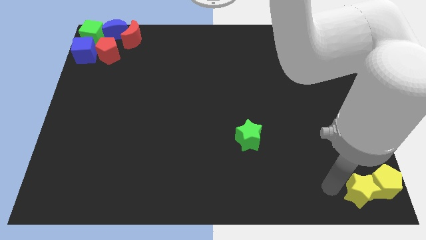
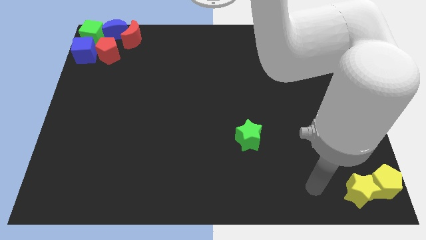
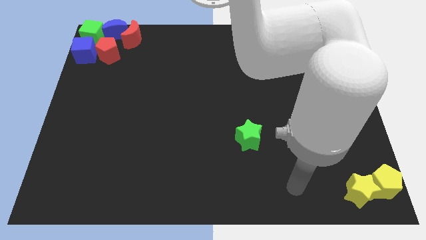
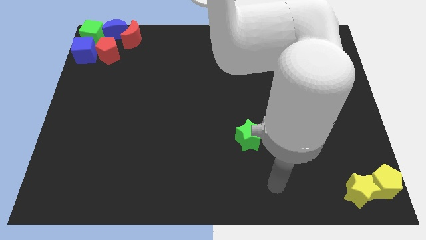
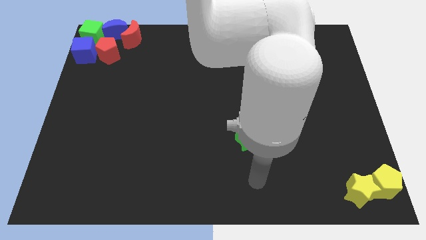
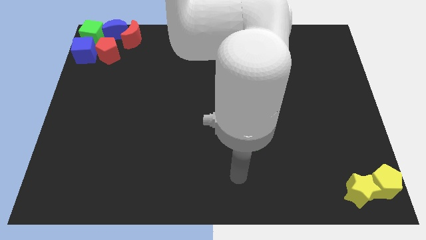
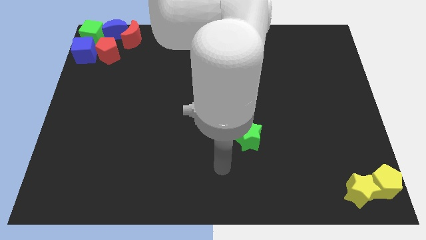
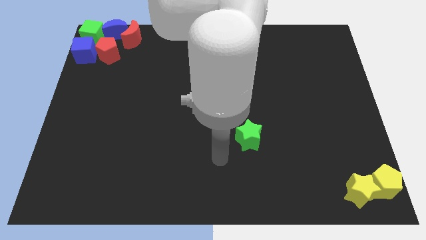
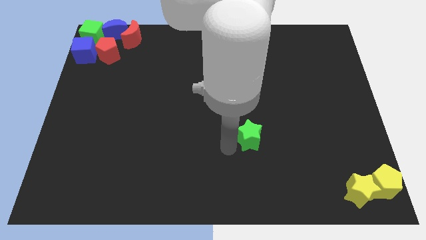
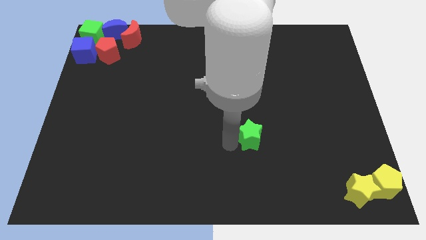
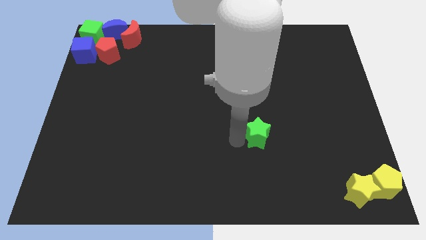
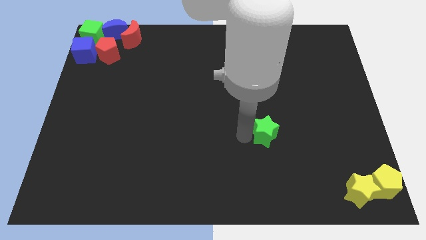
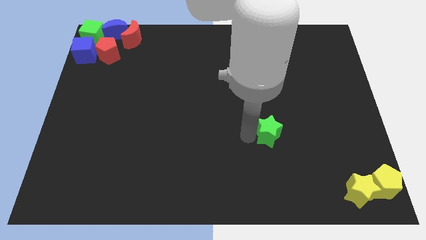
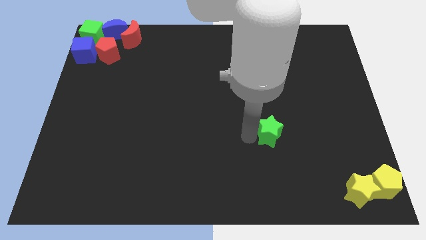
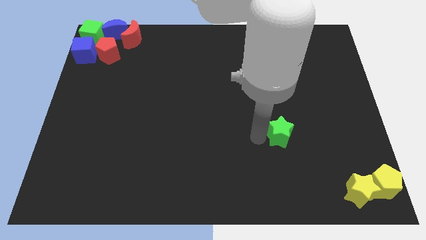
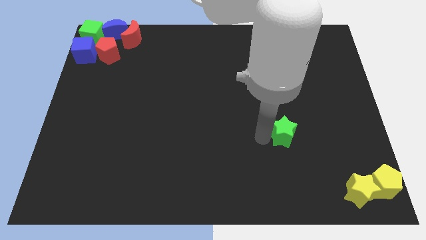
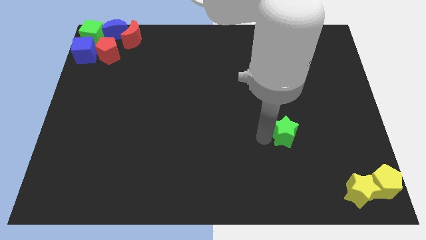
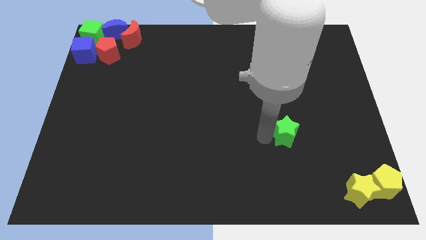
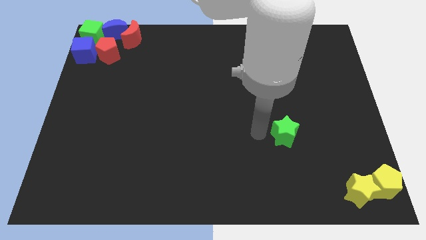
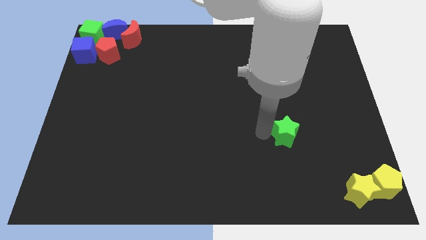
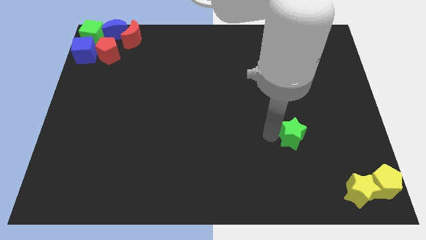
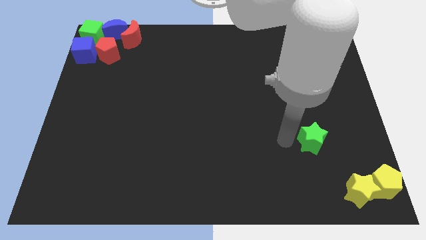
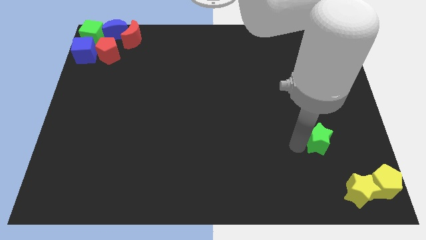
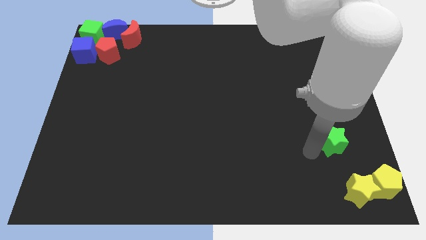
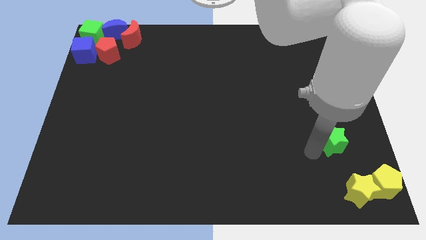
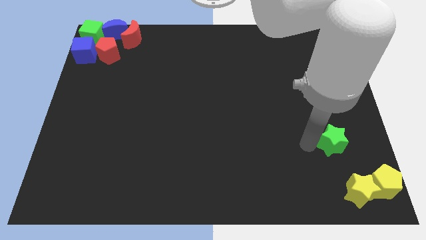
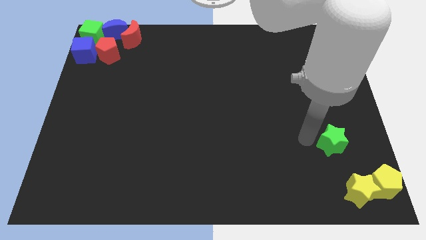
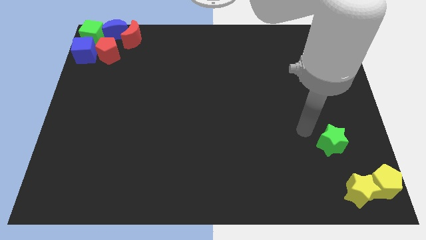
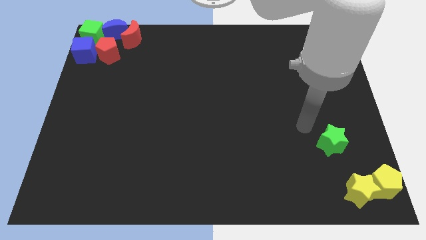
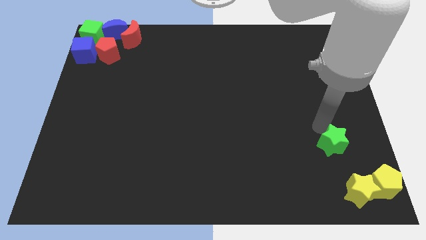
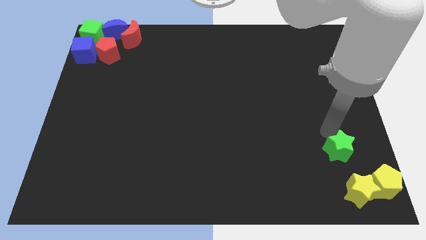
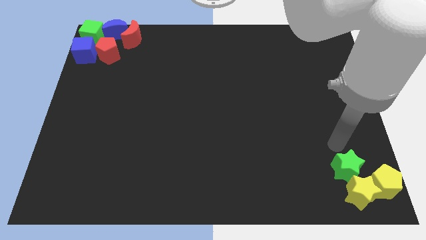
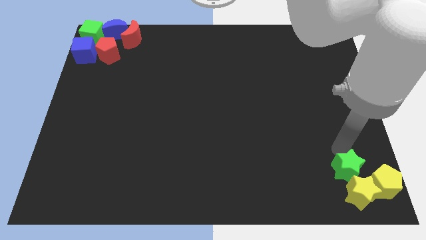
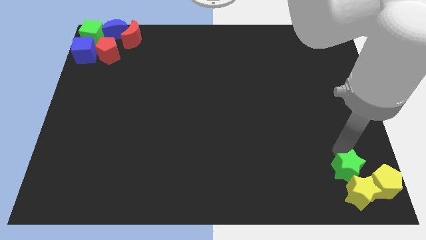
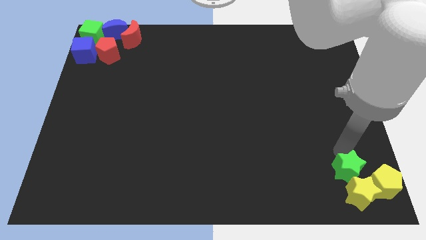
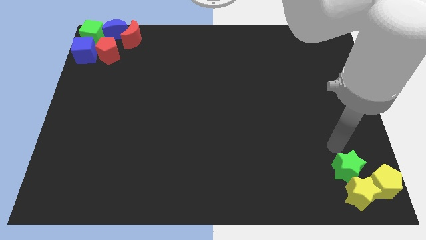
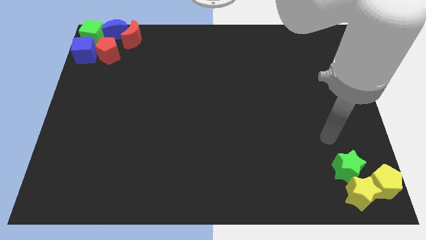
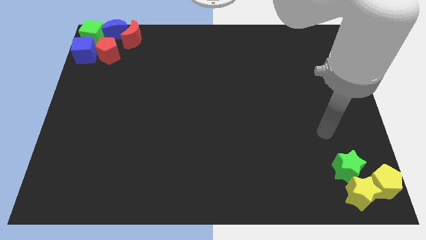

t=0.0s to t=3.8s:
move the green star into the top side of the yellow star

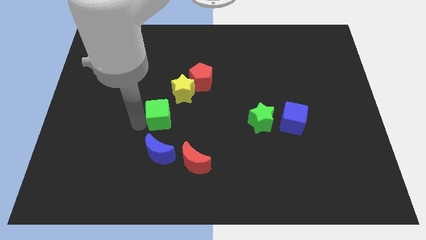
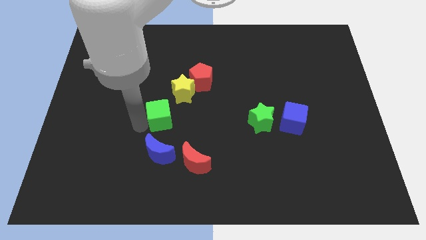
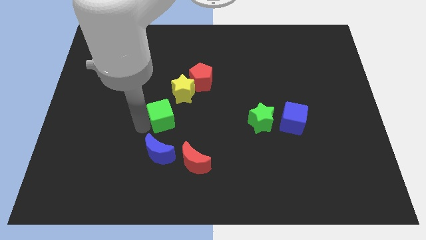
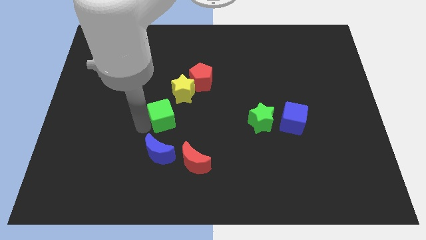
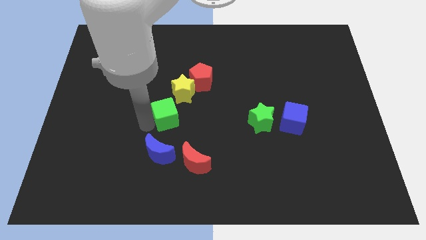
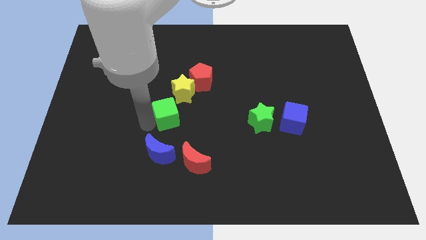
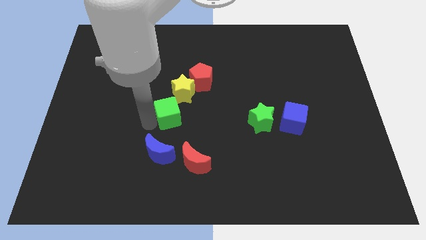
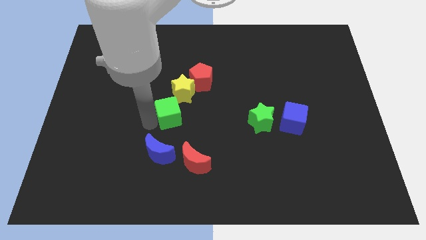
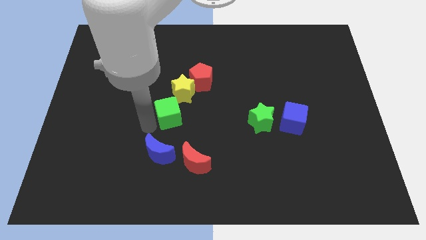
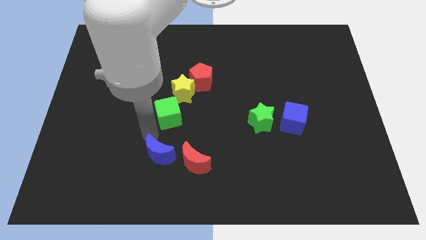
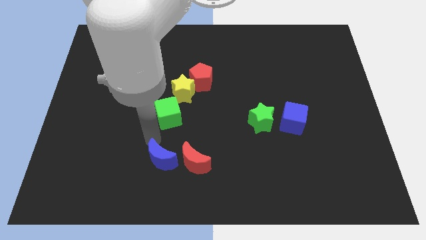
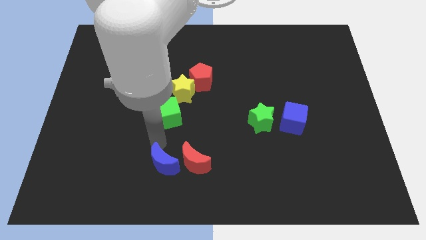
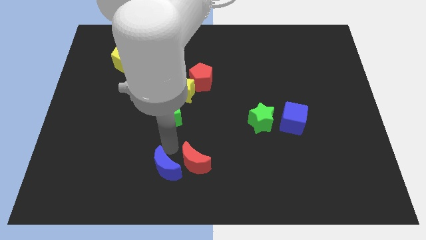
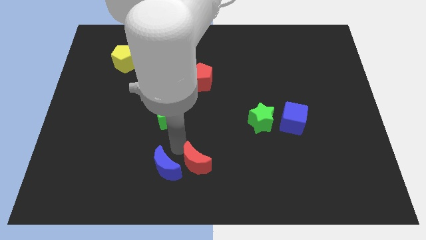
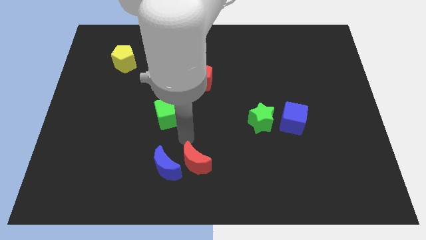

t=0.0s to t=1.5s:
push blue crescent beside red crescent

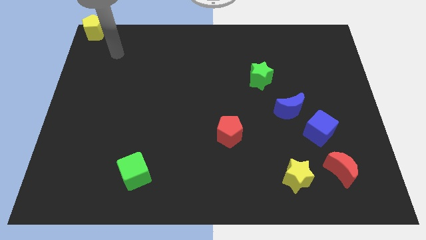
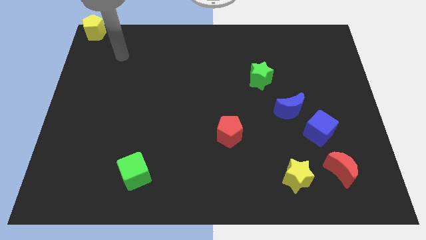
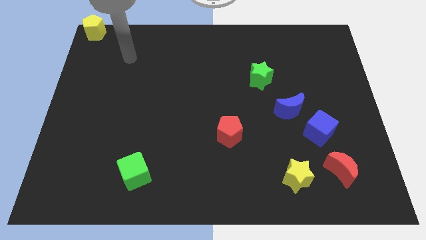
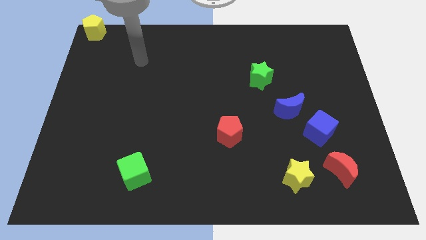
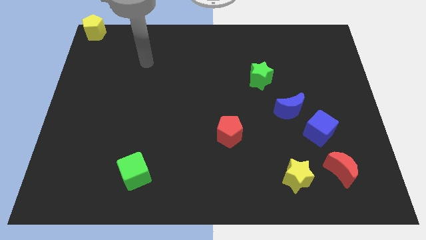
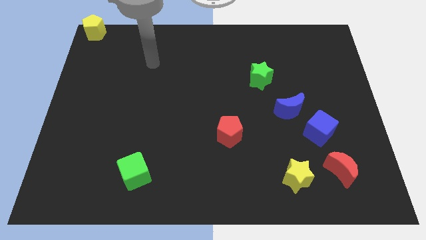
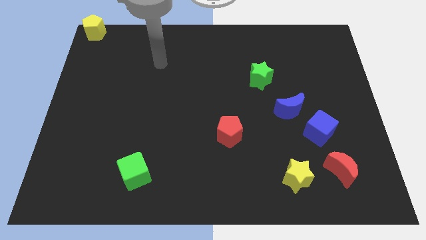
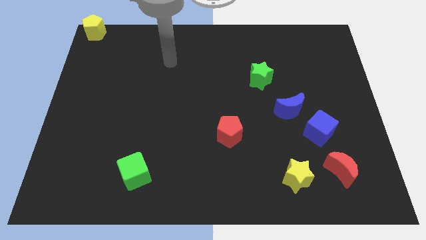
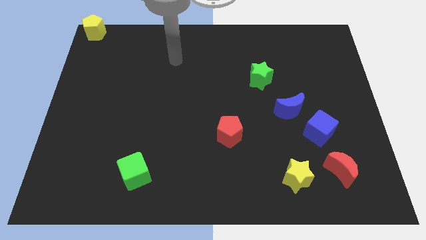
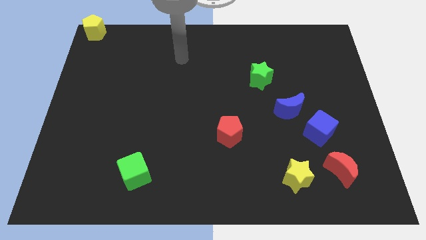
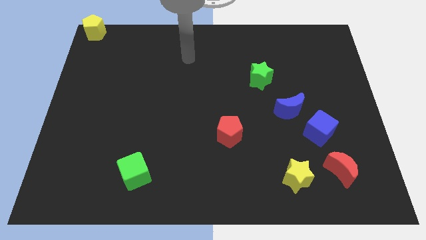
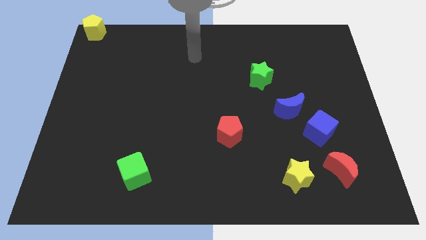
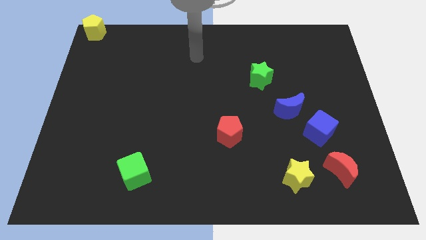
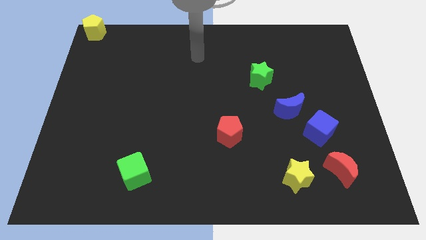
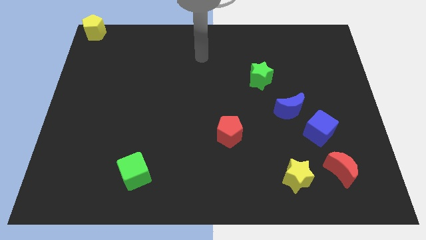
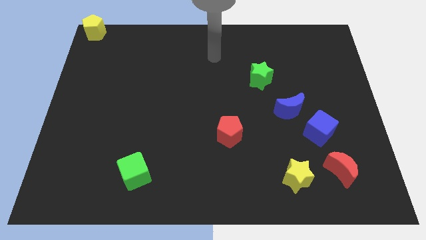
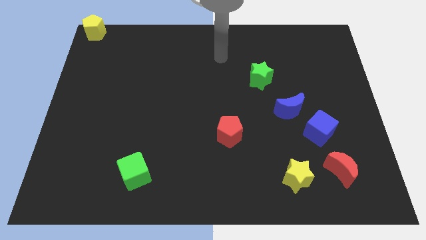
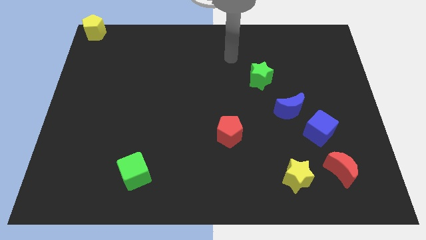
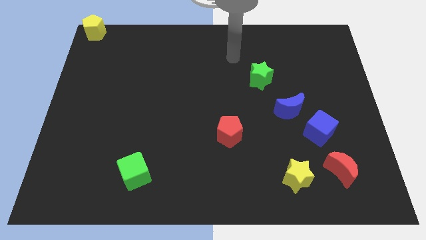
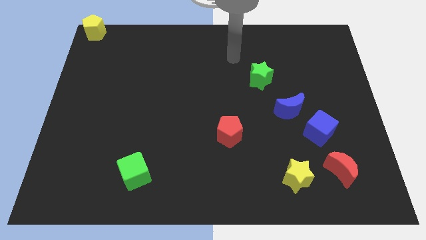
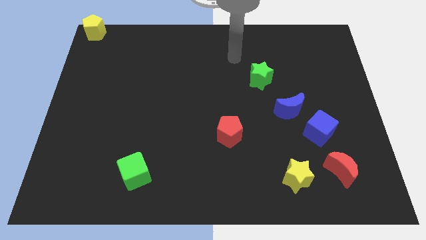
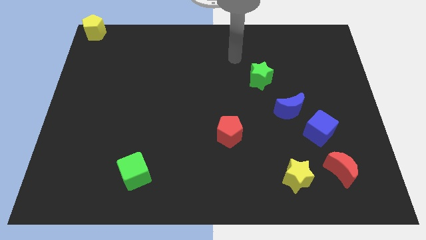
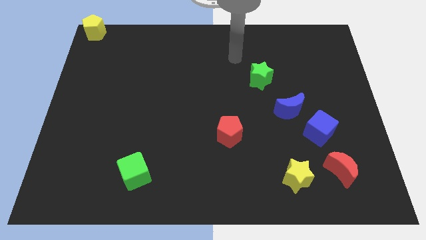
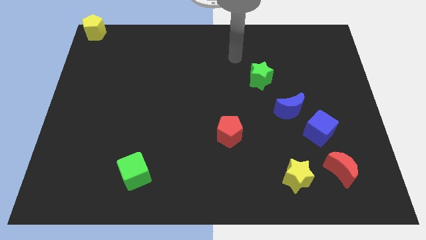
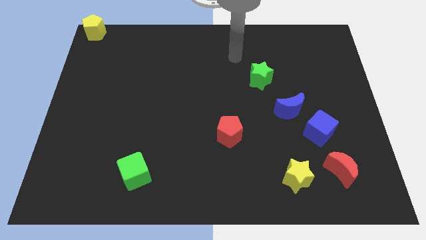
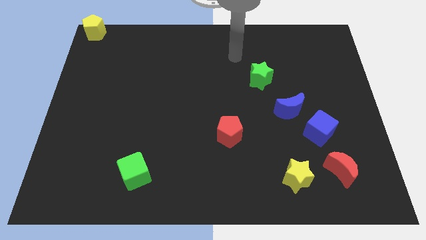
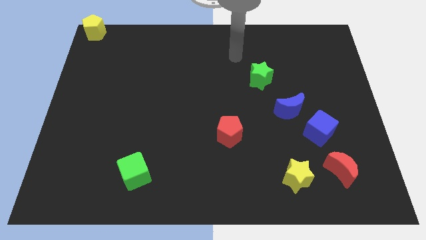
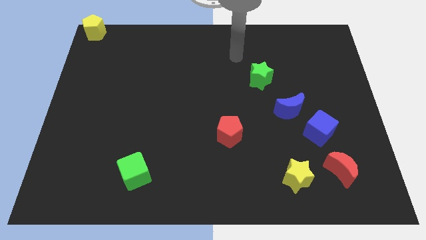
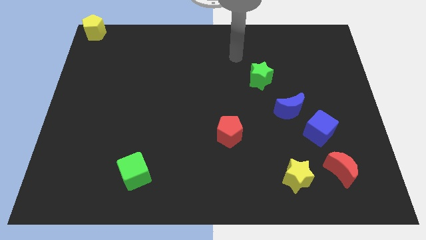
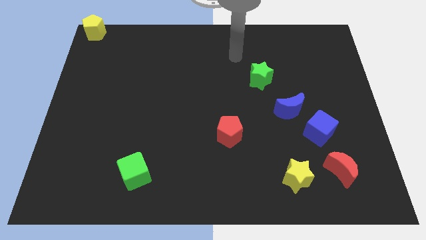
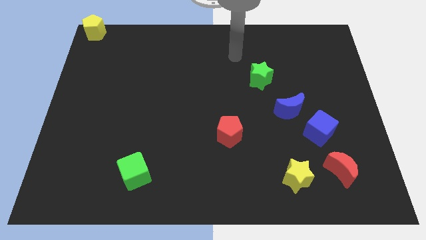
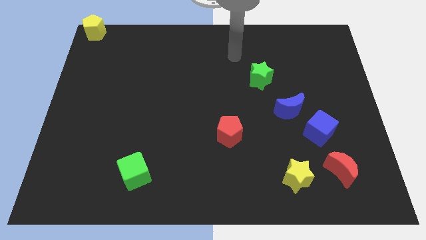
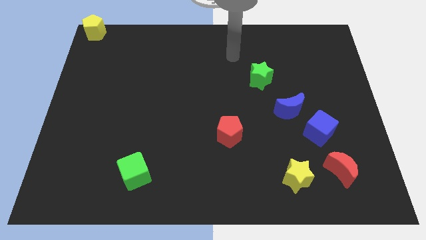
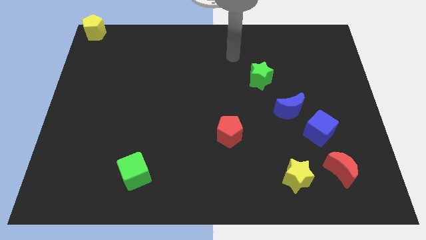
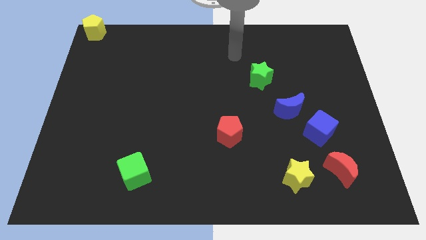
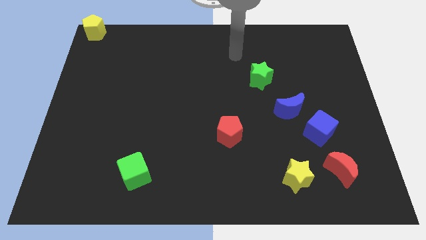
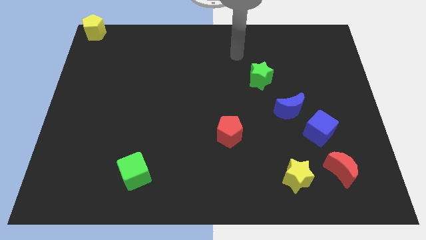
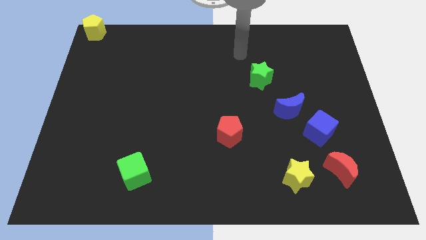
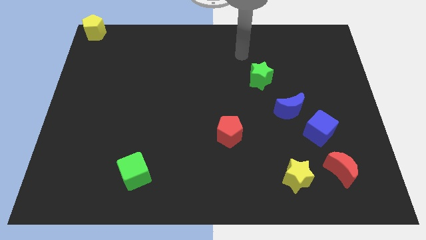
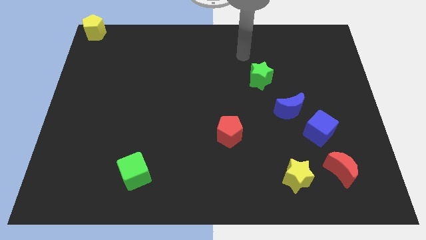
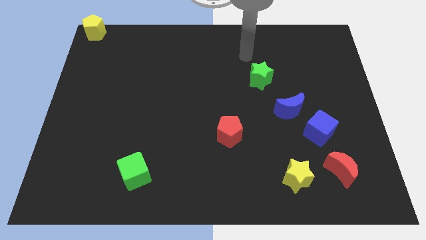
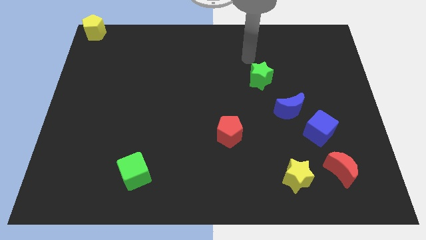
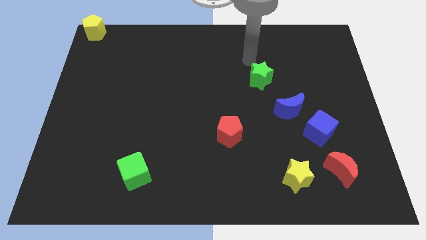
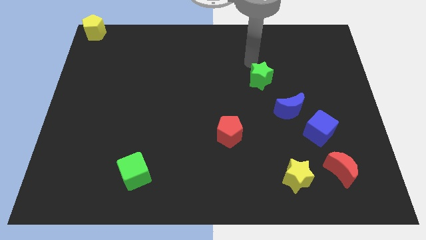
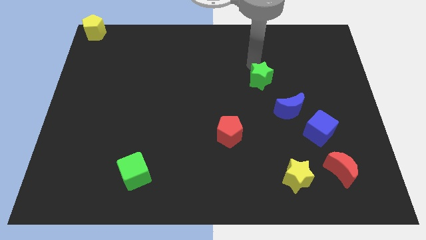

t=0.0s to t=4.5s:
move your arm above the green star
